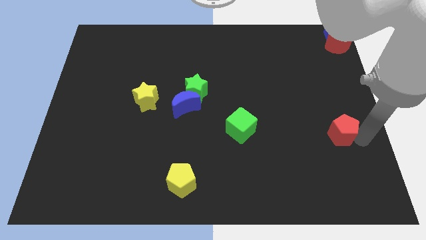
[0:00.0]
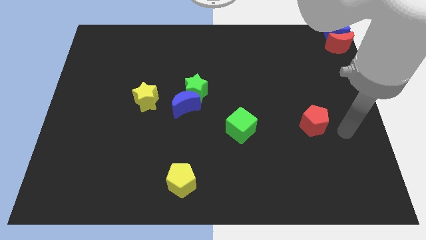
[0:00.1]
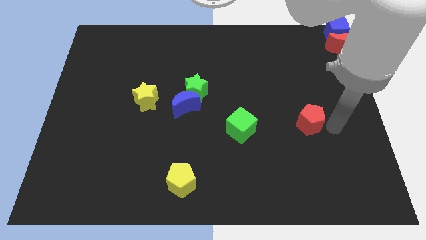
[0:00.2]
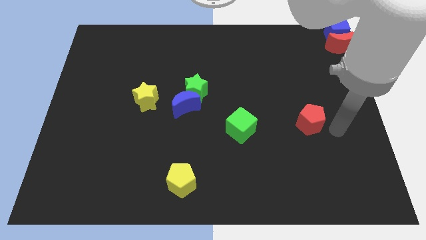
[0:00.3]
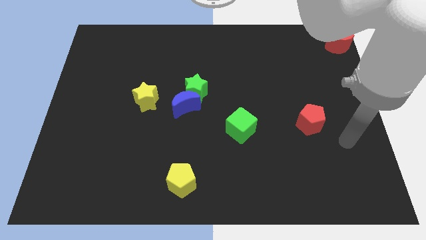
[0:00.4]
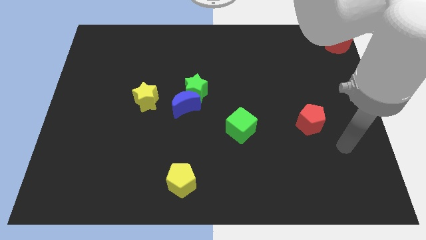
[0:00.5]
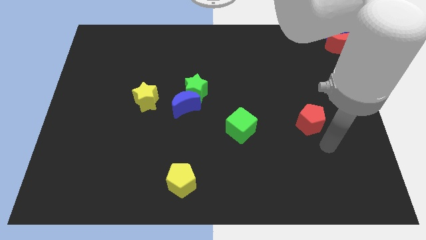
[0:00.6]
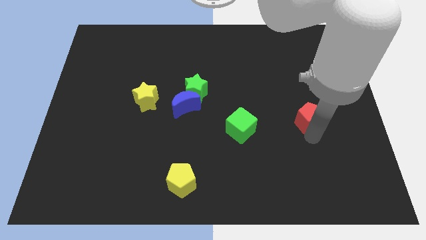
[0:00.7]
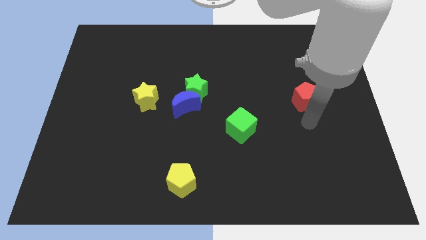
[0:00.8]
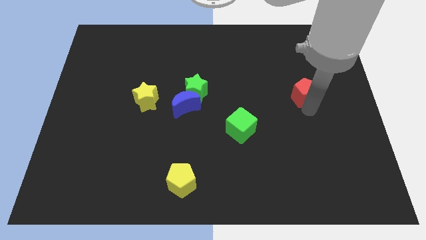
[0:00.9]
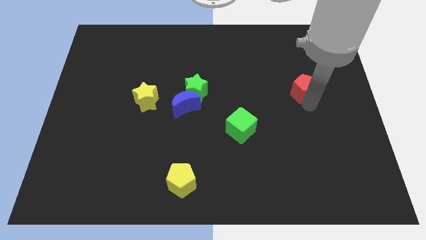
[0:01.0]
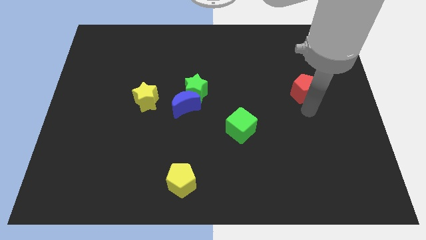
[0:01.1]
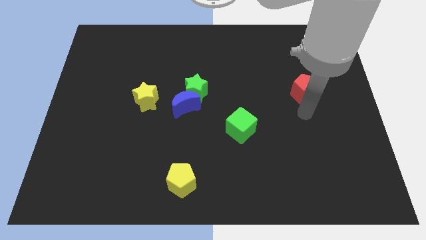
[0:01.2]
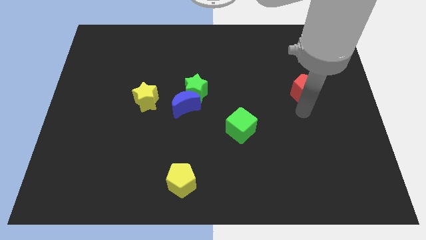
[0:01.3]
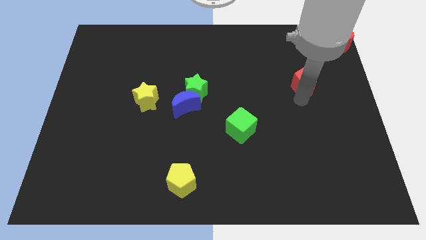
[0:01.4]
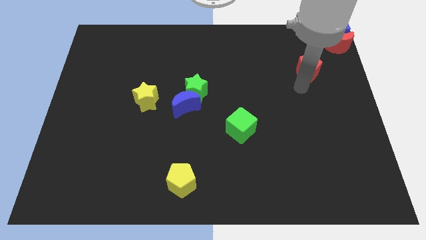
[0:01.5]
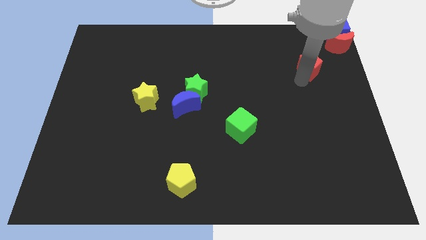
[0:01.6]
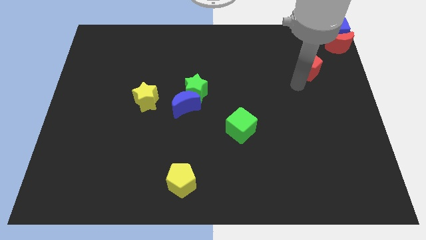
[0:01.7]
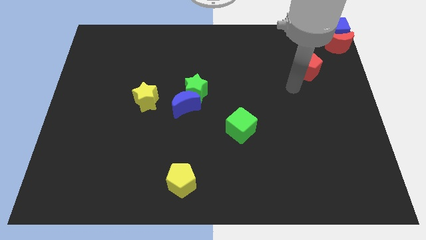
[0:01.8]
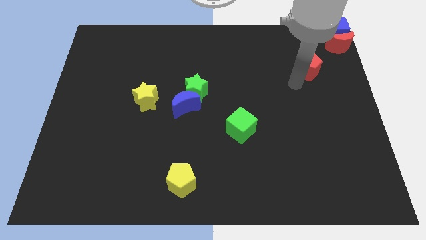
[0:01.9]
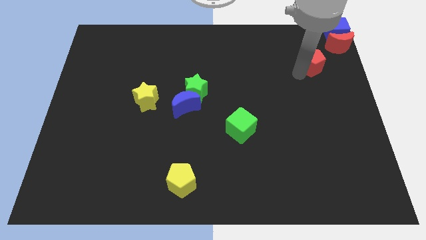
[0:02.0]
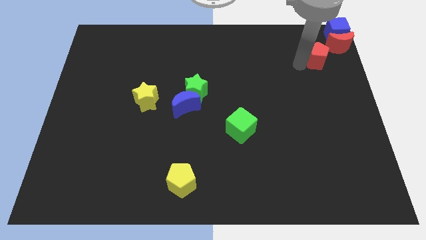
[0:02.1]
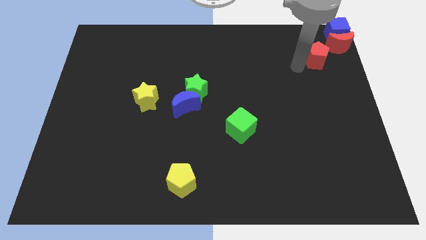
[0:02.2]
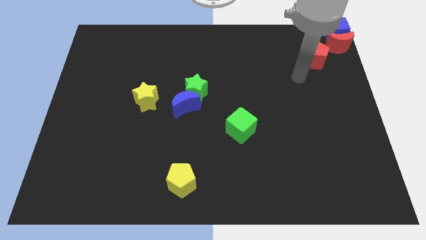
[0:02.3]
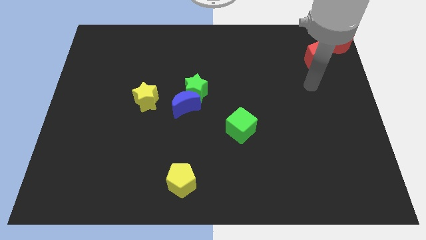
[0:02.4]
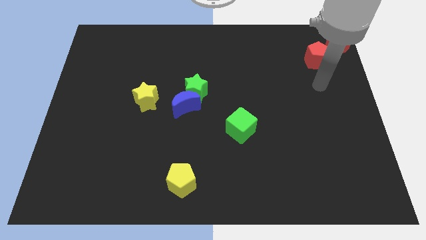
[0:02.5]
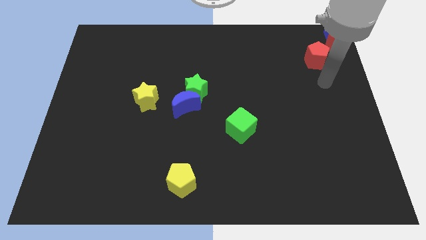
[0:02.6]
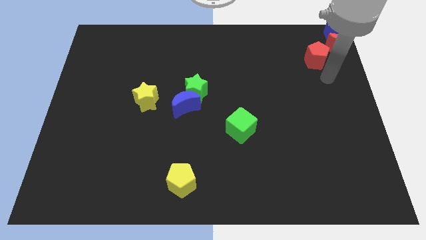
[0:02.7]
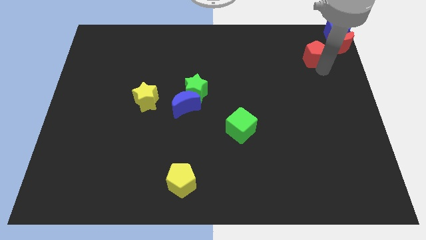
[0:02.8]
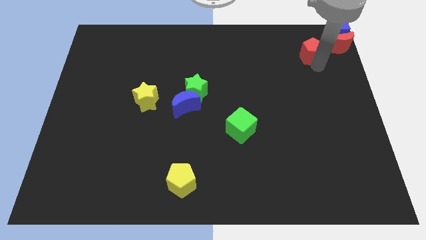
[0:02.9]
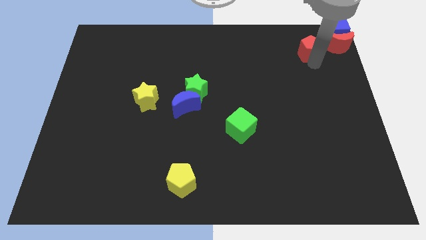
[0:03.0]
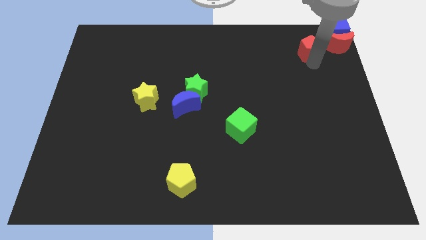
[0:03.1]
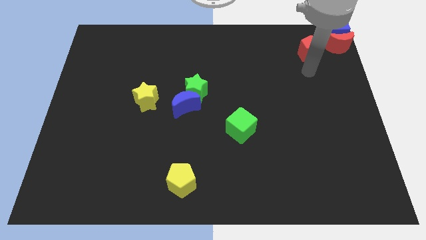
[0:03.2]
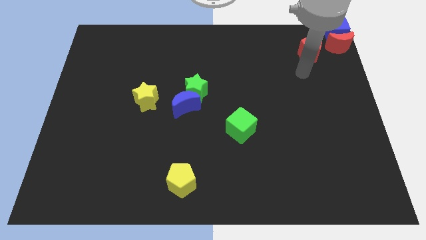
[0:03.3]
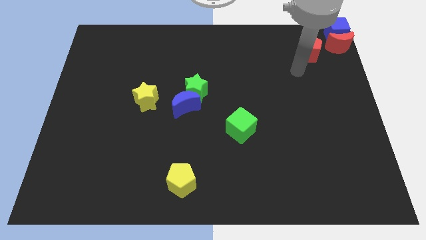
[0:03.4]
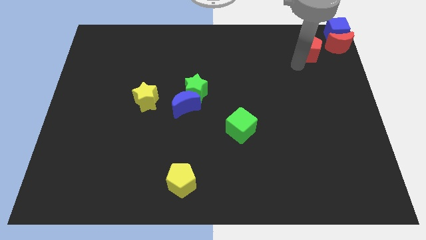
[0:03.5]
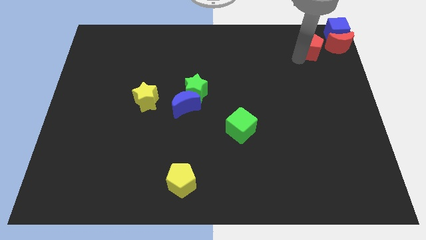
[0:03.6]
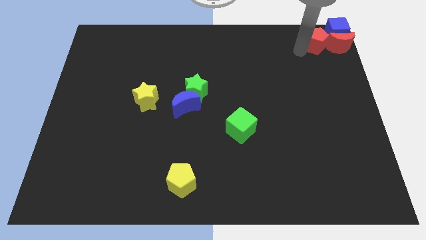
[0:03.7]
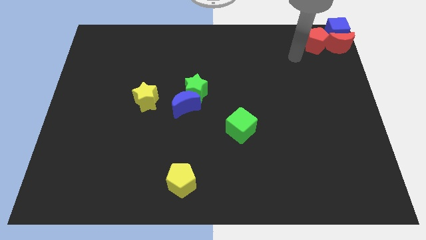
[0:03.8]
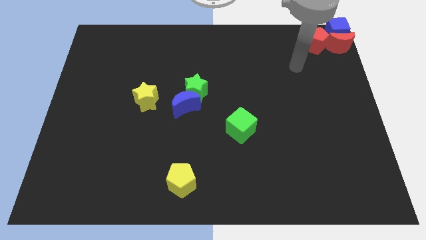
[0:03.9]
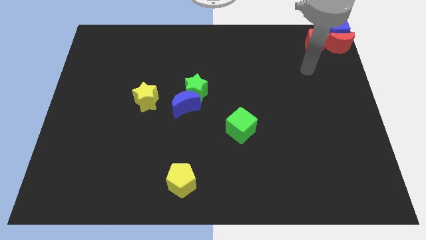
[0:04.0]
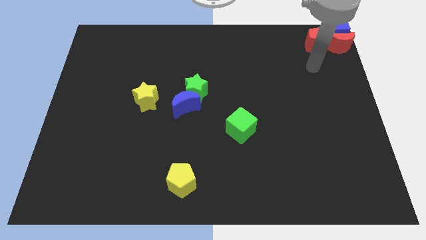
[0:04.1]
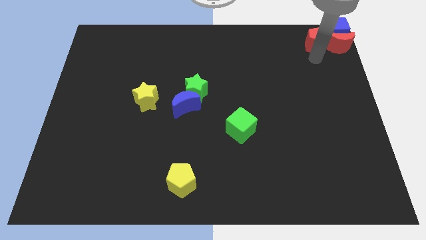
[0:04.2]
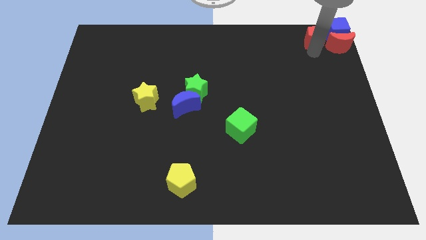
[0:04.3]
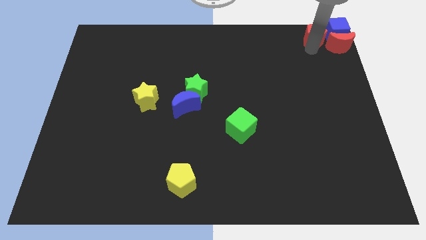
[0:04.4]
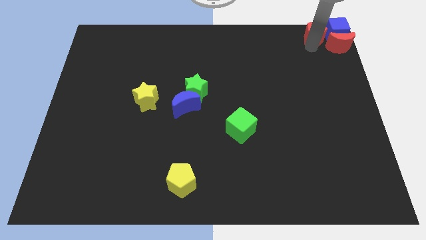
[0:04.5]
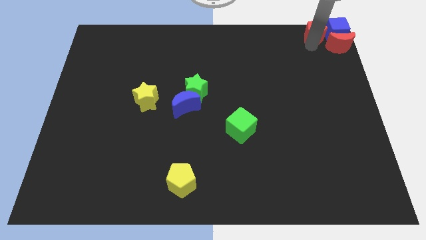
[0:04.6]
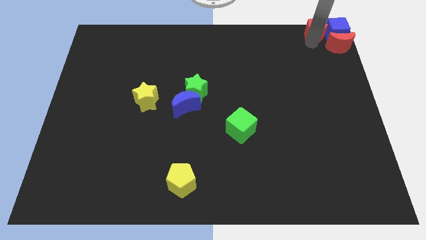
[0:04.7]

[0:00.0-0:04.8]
put the red pentagon to the left of the cube at the top right

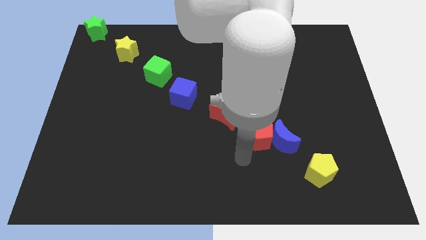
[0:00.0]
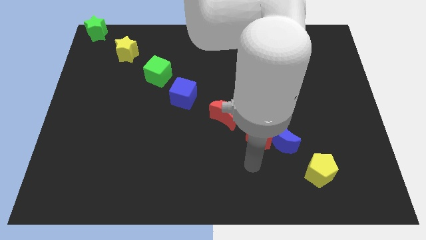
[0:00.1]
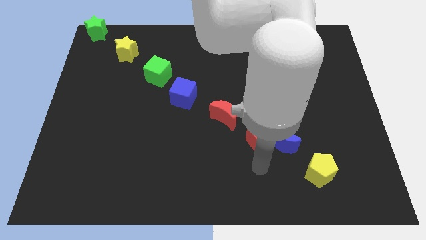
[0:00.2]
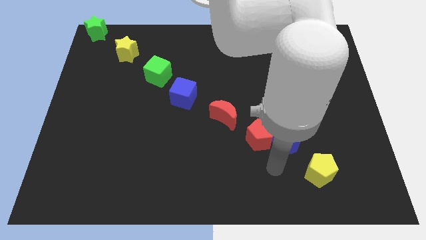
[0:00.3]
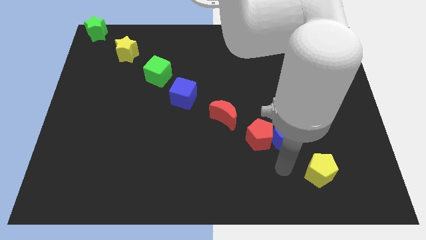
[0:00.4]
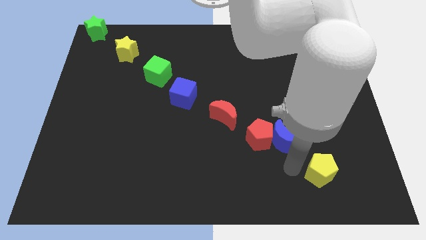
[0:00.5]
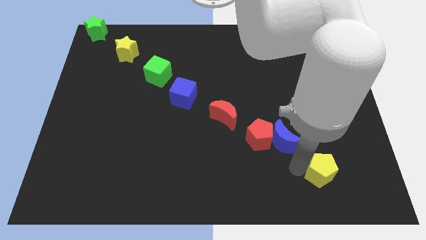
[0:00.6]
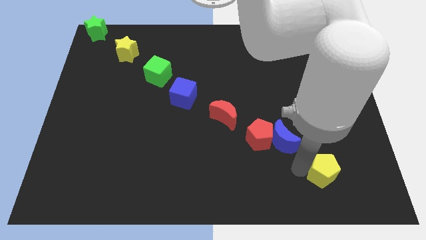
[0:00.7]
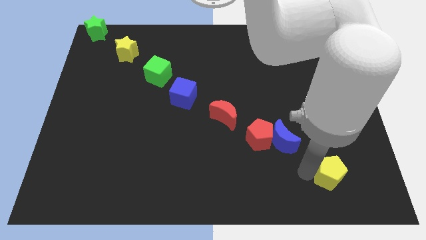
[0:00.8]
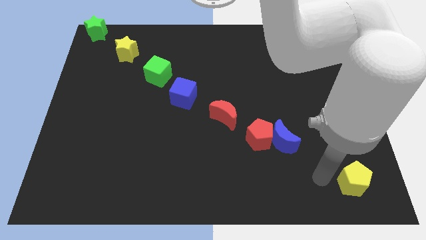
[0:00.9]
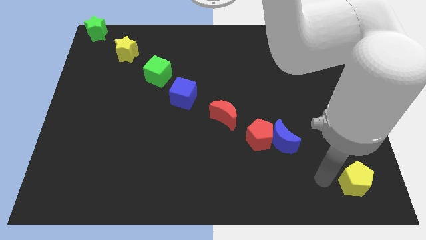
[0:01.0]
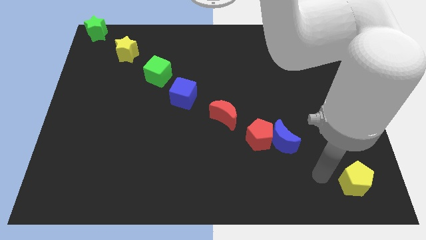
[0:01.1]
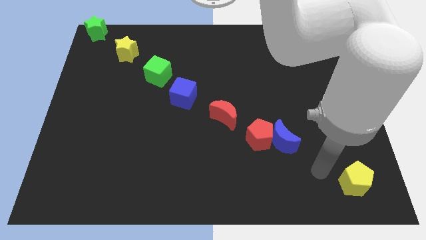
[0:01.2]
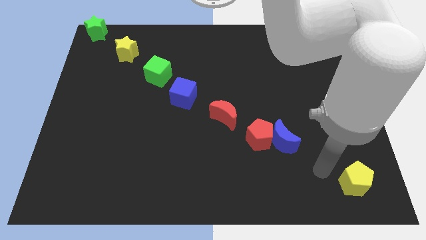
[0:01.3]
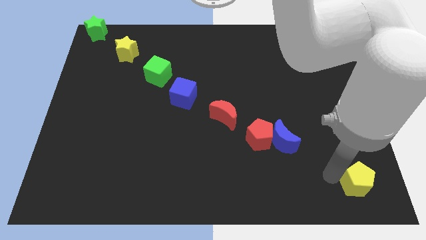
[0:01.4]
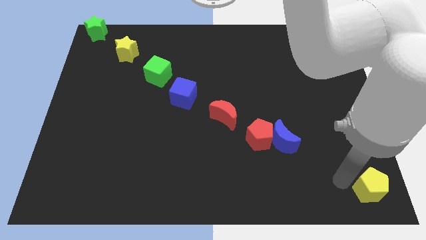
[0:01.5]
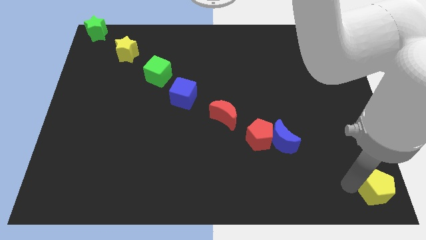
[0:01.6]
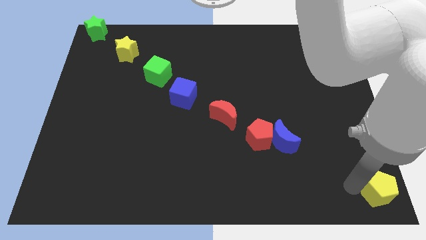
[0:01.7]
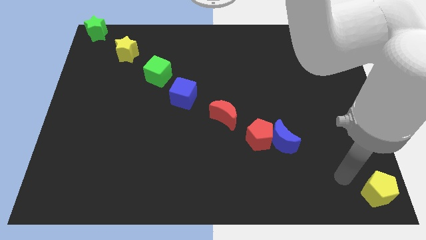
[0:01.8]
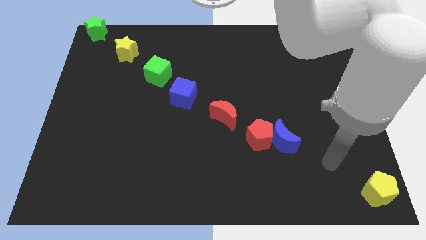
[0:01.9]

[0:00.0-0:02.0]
place the yellow pentagon at the bottom right corner of the board

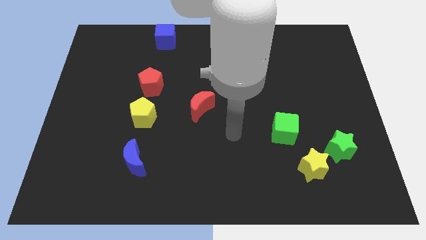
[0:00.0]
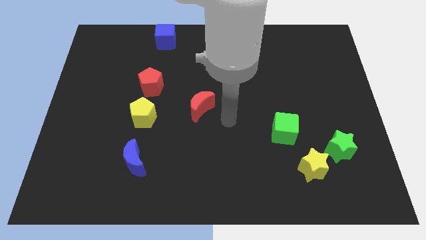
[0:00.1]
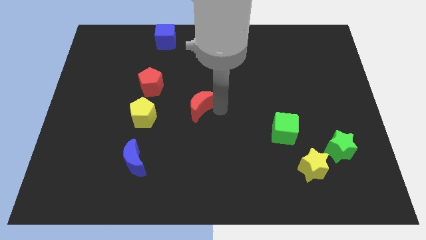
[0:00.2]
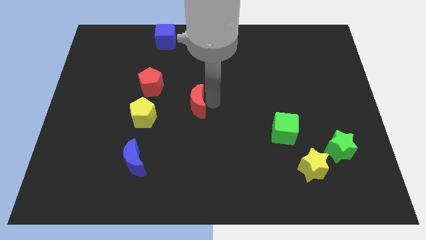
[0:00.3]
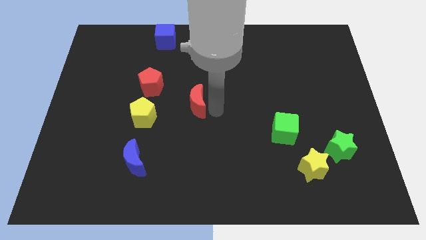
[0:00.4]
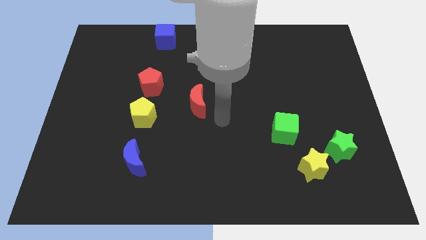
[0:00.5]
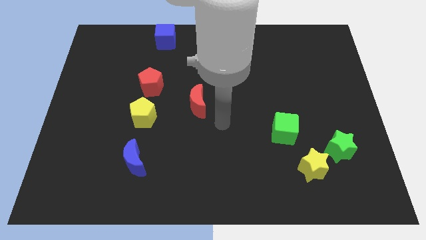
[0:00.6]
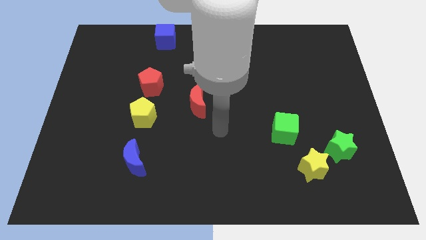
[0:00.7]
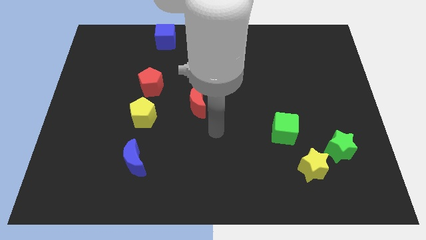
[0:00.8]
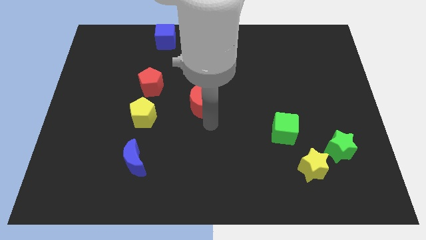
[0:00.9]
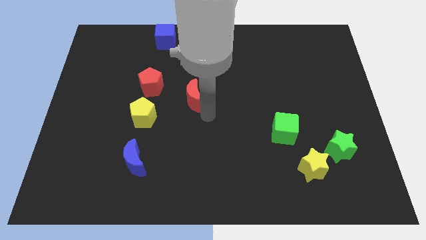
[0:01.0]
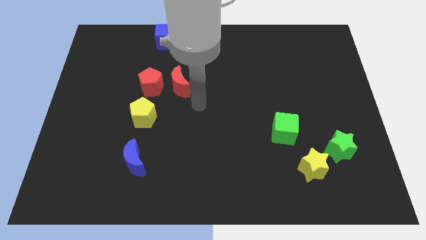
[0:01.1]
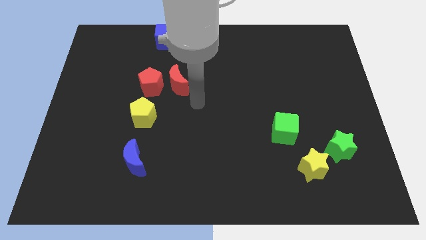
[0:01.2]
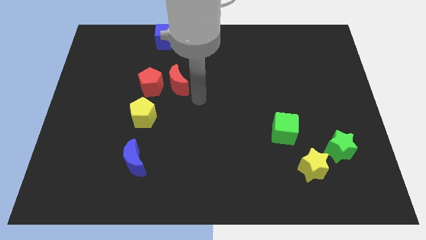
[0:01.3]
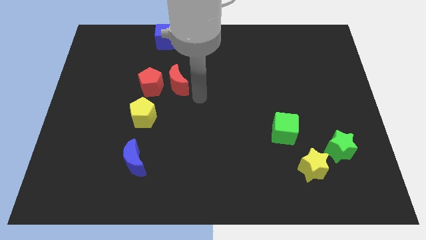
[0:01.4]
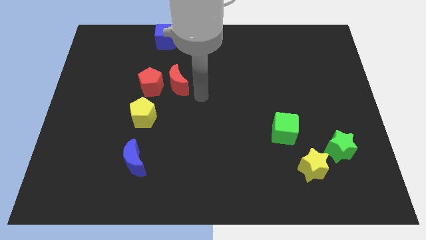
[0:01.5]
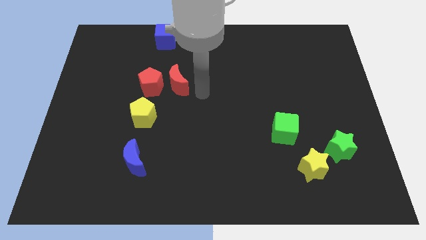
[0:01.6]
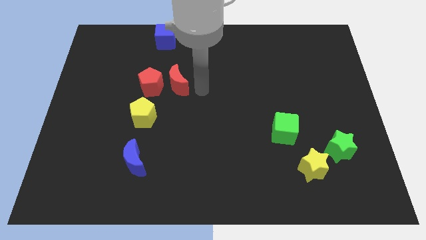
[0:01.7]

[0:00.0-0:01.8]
push the red moon to the right side of the red pentagon

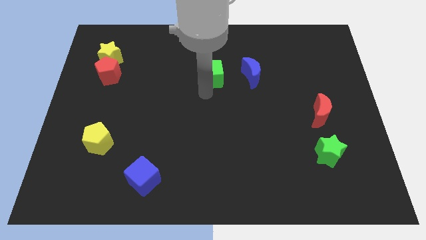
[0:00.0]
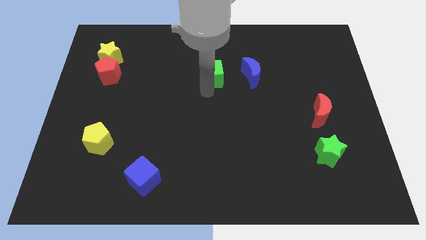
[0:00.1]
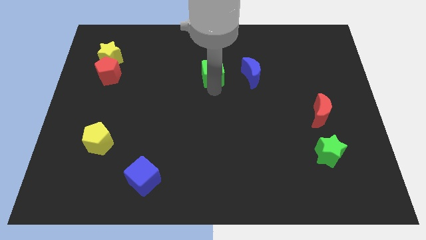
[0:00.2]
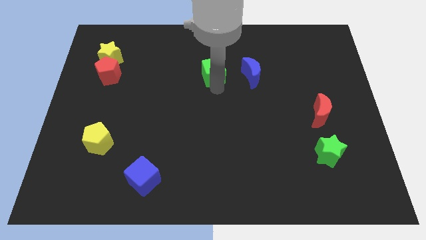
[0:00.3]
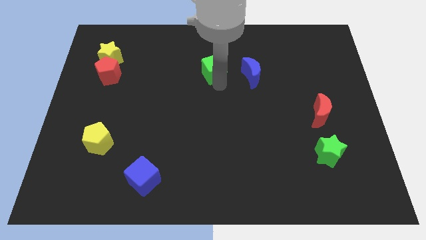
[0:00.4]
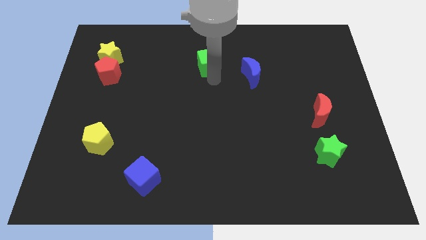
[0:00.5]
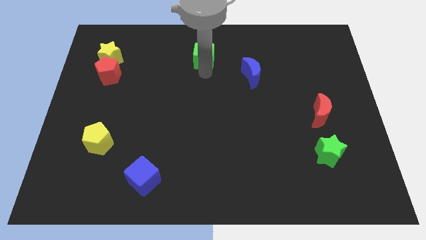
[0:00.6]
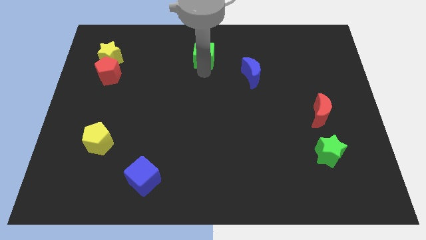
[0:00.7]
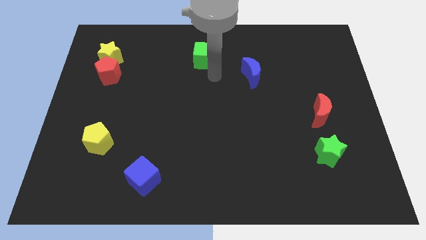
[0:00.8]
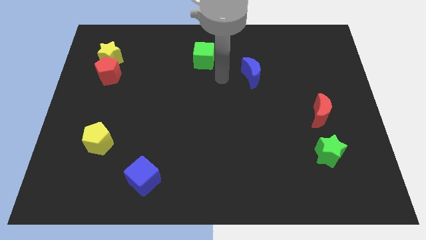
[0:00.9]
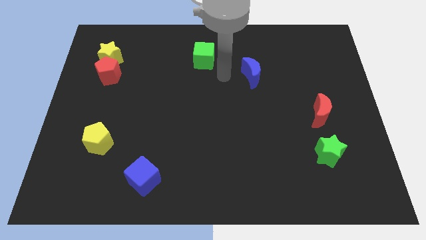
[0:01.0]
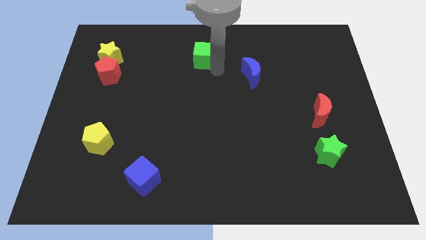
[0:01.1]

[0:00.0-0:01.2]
push the green cube towards the top center
